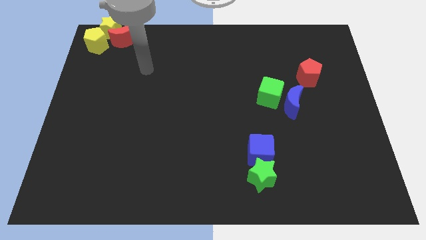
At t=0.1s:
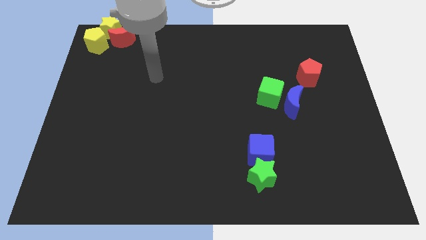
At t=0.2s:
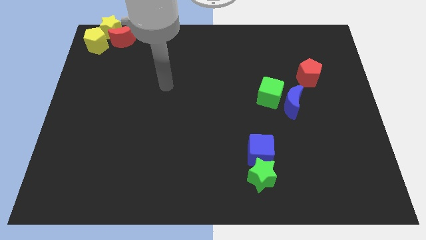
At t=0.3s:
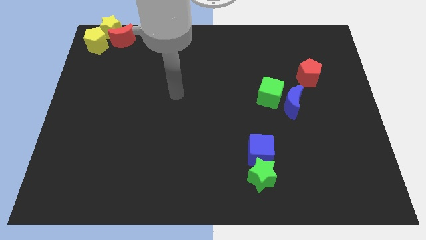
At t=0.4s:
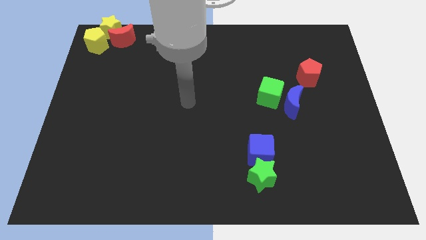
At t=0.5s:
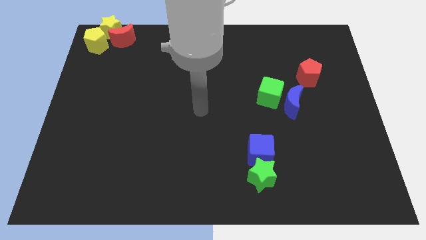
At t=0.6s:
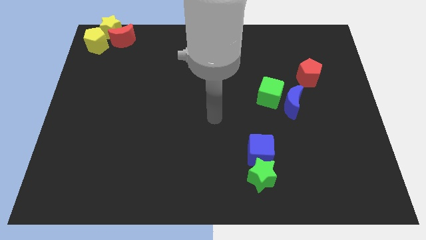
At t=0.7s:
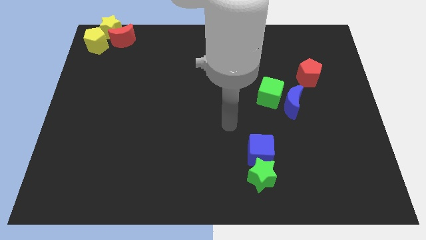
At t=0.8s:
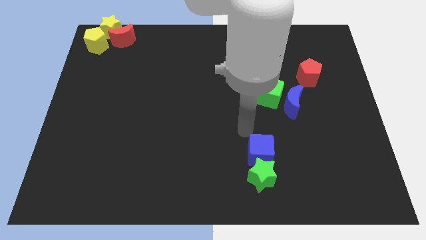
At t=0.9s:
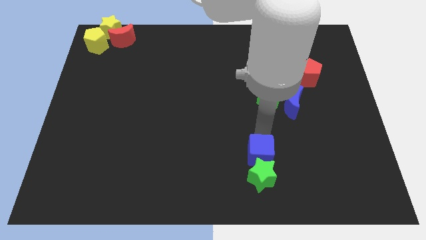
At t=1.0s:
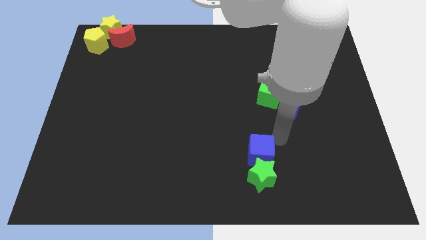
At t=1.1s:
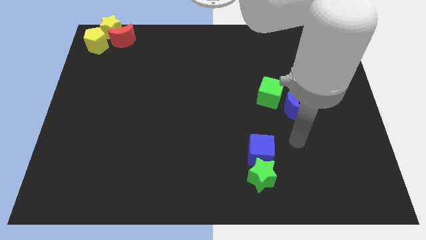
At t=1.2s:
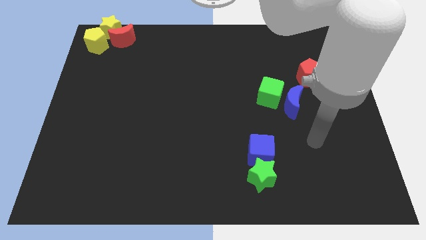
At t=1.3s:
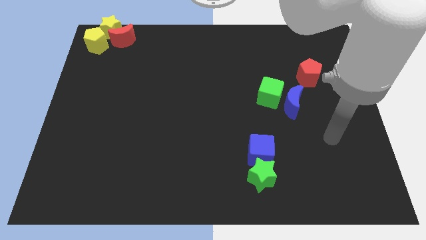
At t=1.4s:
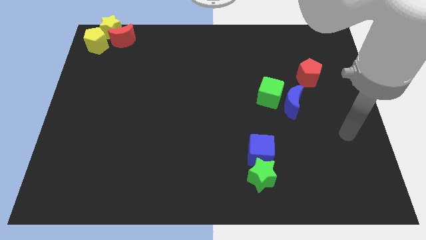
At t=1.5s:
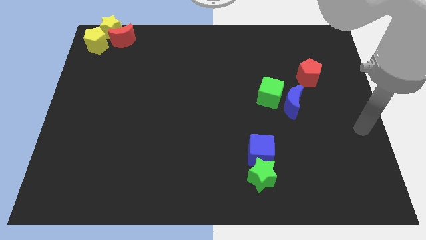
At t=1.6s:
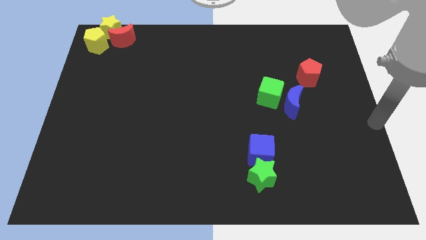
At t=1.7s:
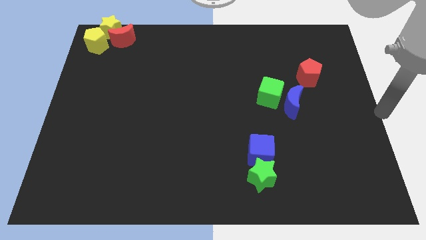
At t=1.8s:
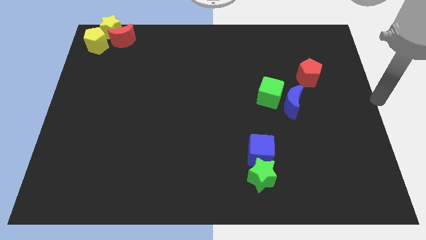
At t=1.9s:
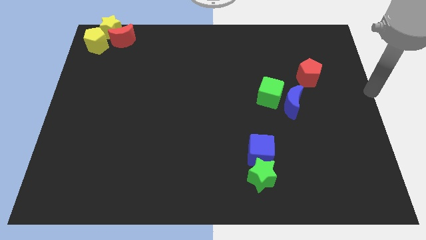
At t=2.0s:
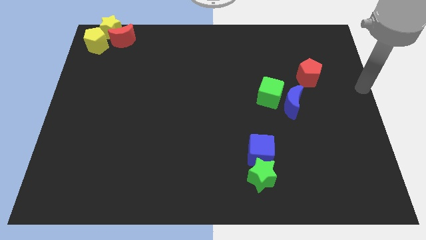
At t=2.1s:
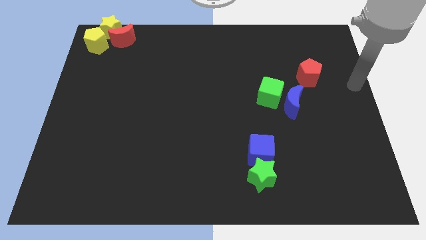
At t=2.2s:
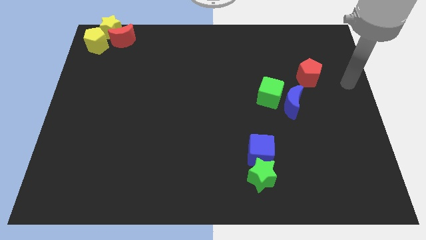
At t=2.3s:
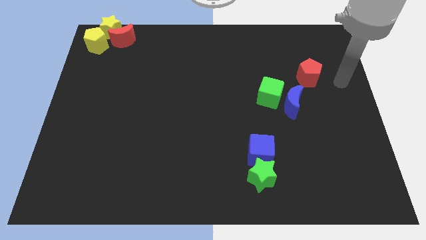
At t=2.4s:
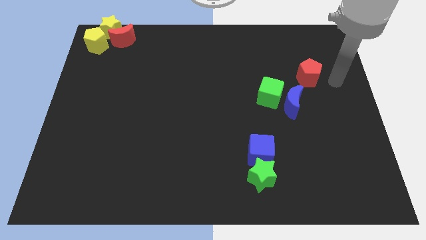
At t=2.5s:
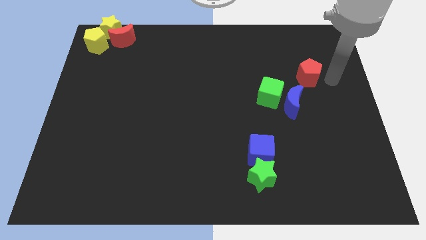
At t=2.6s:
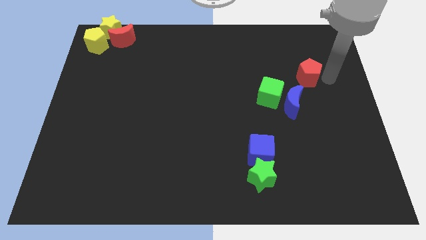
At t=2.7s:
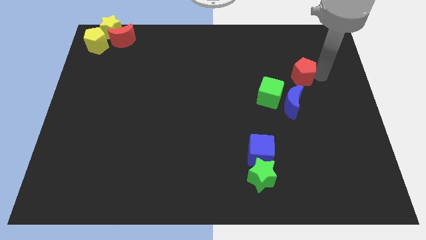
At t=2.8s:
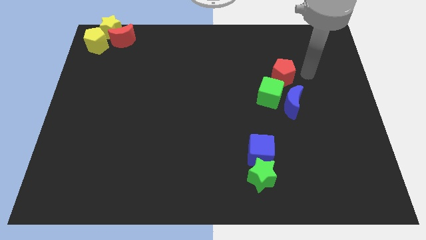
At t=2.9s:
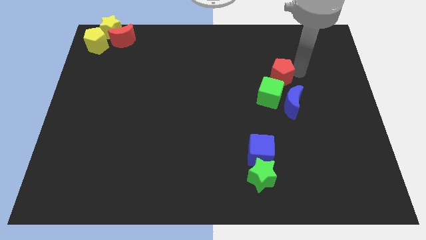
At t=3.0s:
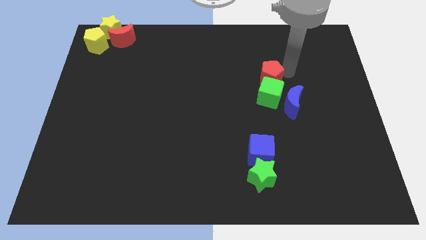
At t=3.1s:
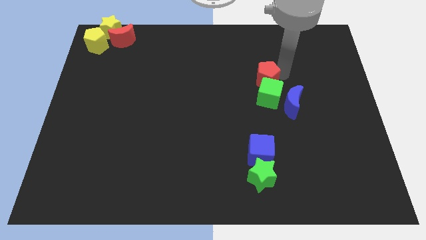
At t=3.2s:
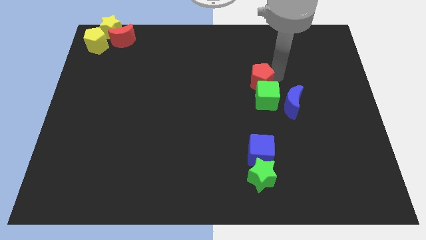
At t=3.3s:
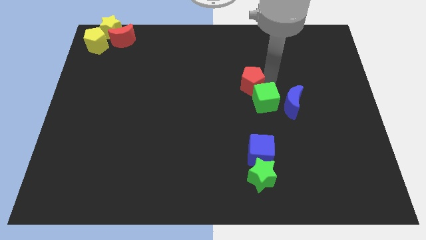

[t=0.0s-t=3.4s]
move the red pentagon into the green cube

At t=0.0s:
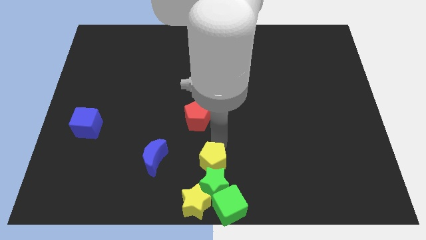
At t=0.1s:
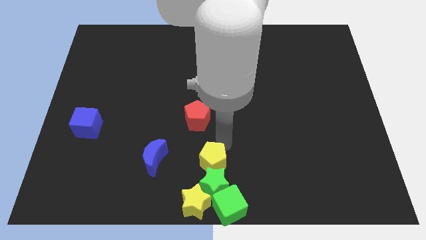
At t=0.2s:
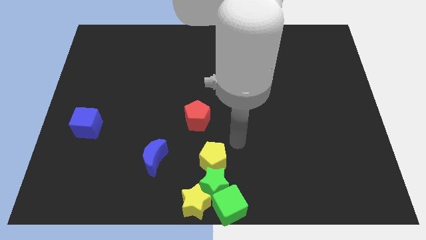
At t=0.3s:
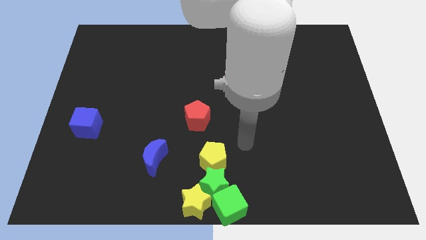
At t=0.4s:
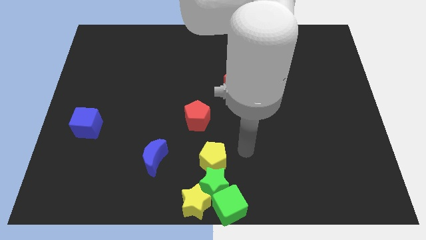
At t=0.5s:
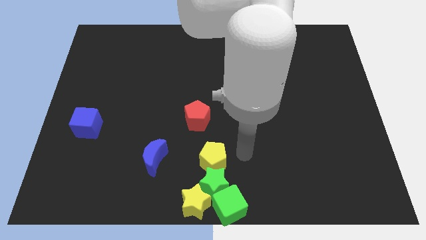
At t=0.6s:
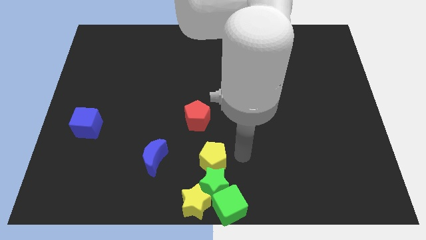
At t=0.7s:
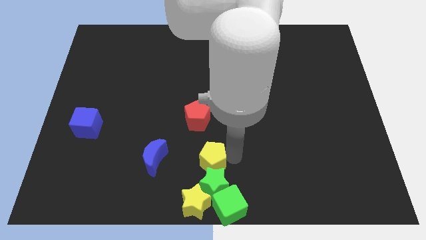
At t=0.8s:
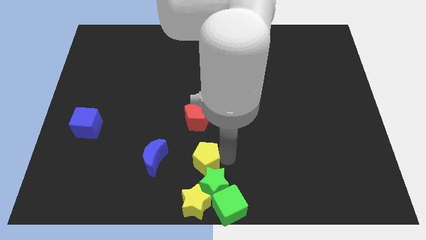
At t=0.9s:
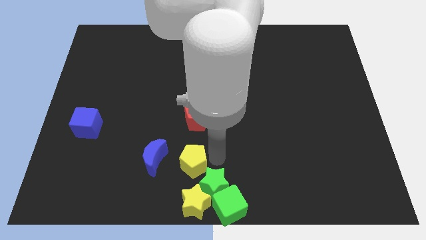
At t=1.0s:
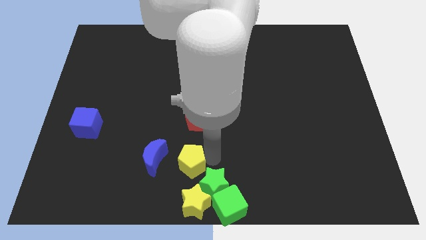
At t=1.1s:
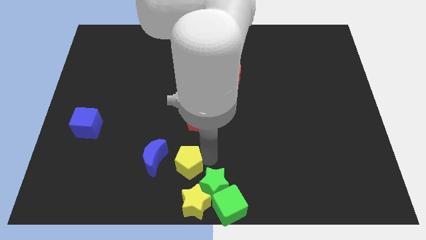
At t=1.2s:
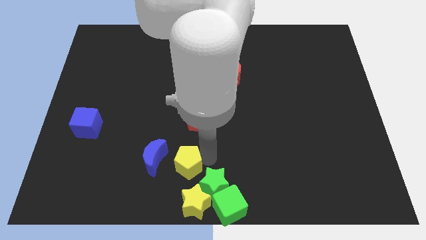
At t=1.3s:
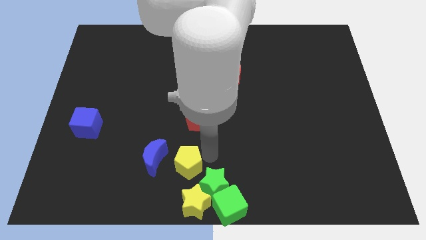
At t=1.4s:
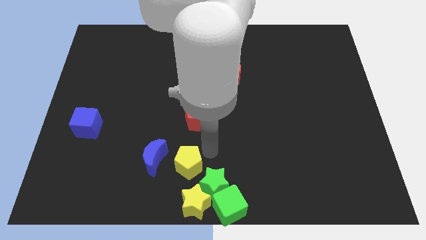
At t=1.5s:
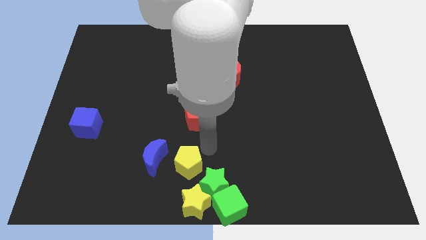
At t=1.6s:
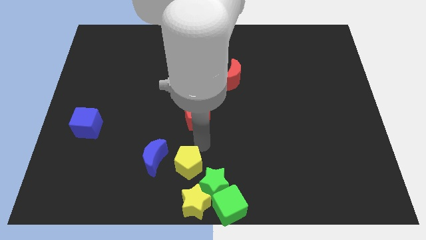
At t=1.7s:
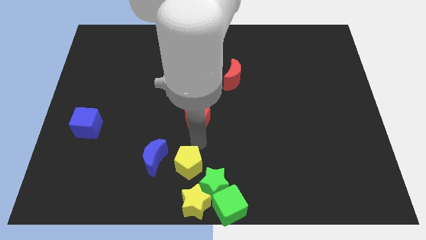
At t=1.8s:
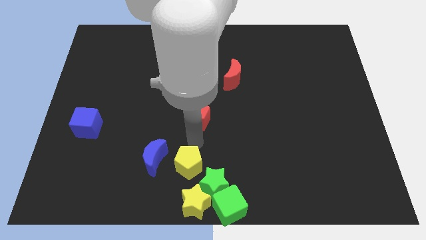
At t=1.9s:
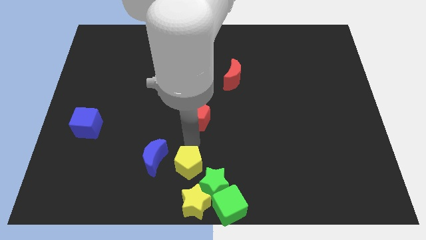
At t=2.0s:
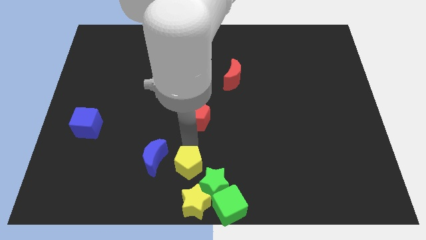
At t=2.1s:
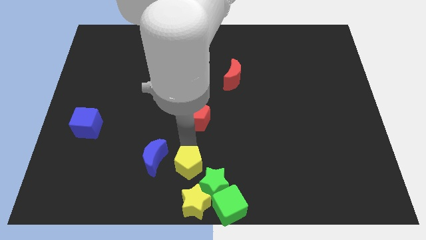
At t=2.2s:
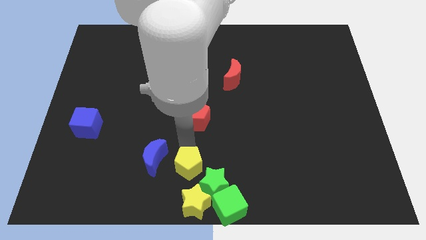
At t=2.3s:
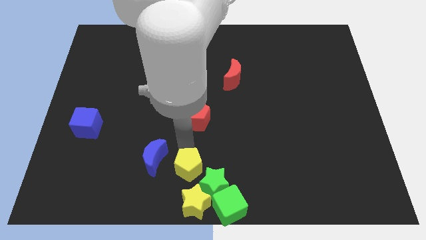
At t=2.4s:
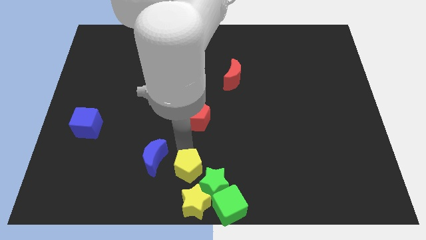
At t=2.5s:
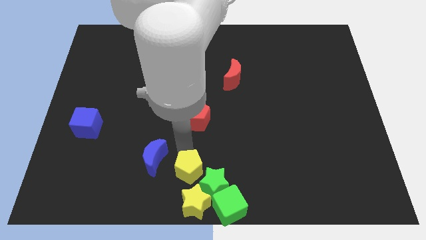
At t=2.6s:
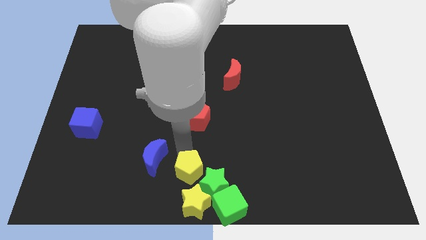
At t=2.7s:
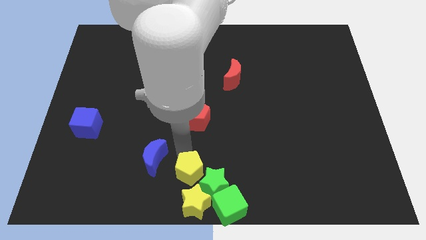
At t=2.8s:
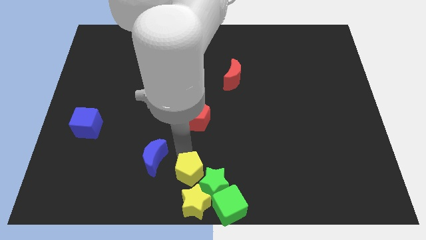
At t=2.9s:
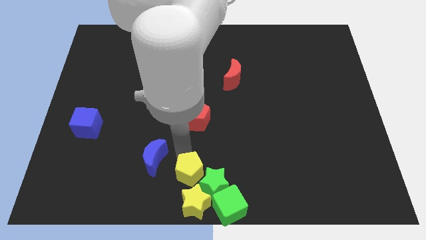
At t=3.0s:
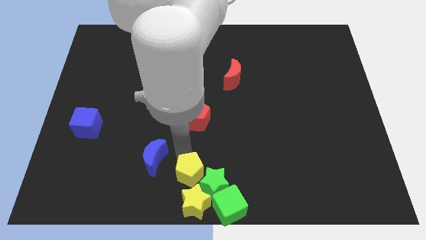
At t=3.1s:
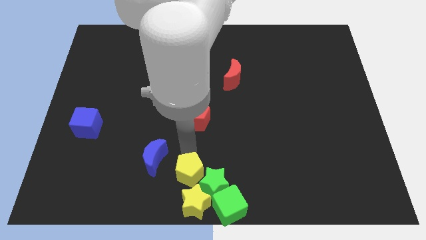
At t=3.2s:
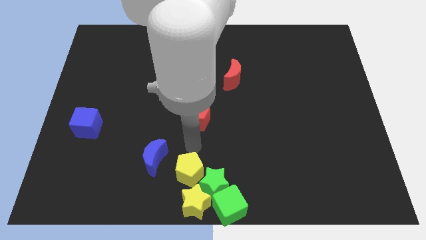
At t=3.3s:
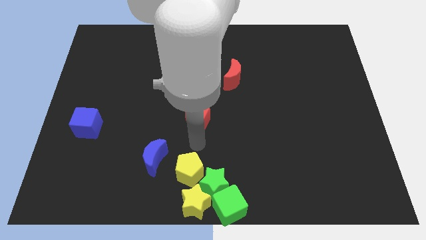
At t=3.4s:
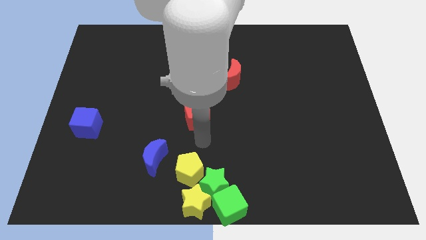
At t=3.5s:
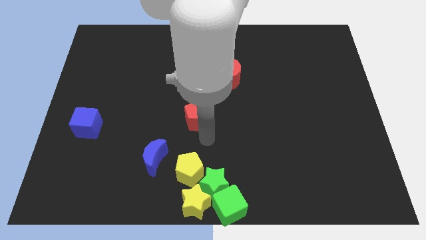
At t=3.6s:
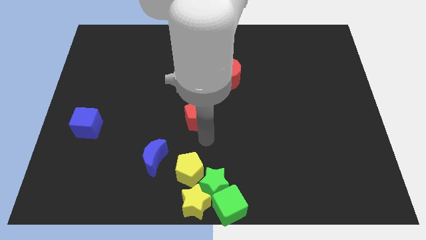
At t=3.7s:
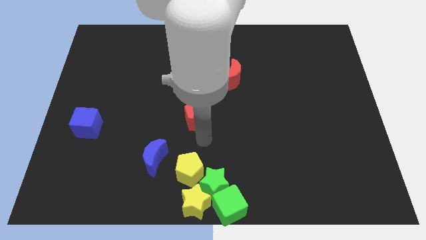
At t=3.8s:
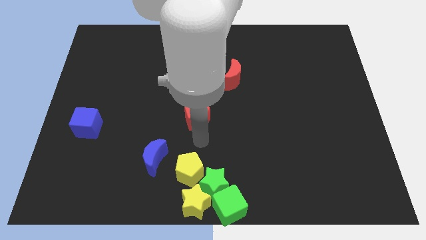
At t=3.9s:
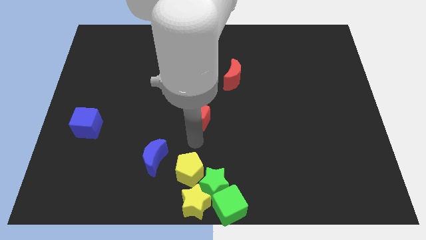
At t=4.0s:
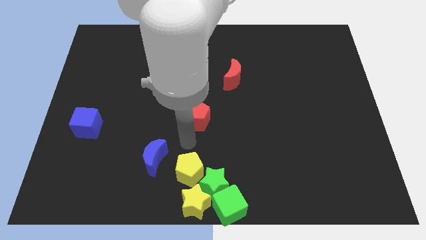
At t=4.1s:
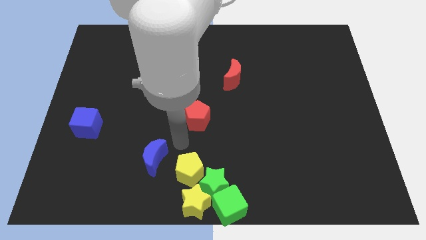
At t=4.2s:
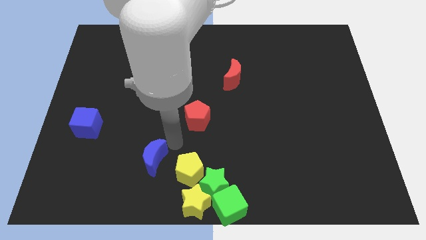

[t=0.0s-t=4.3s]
slightly move the yellow pentagon towards the yellow star

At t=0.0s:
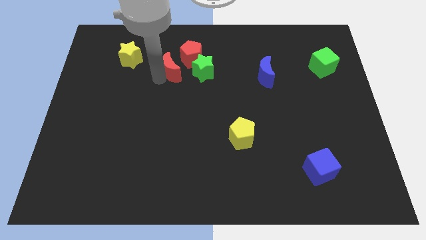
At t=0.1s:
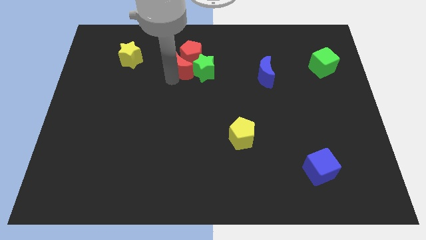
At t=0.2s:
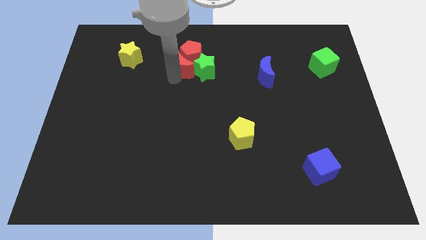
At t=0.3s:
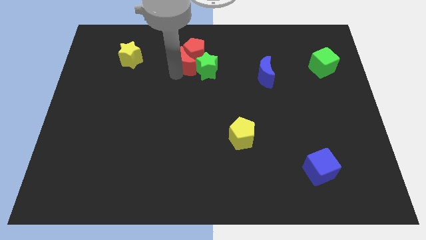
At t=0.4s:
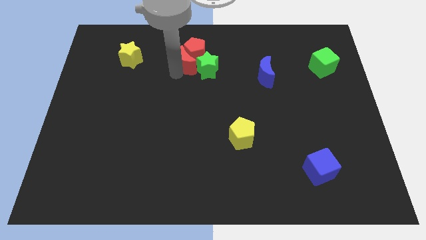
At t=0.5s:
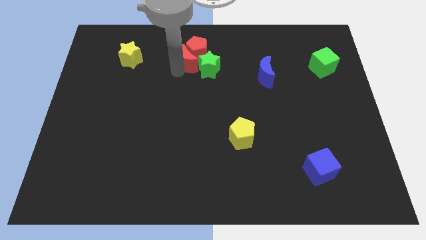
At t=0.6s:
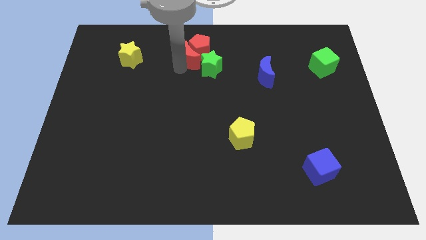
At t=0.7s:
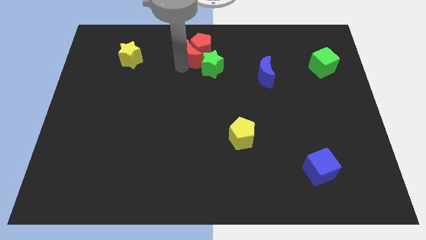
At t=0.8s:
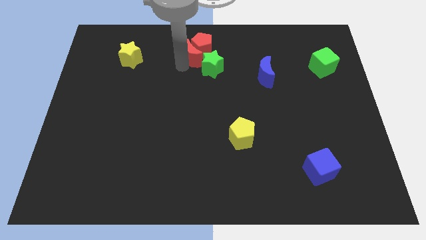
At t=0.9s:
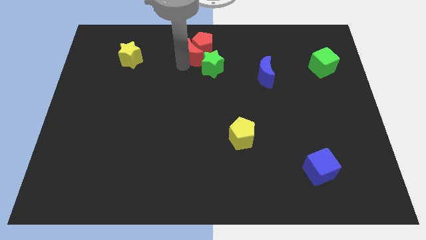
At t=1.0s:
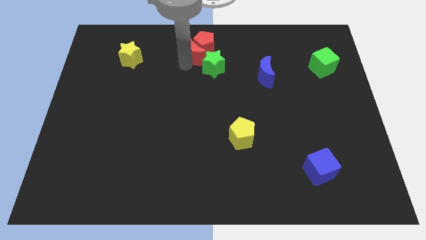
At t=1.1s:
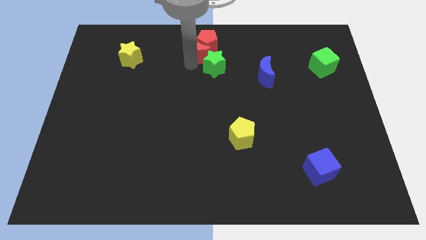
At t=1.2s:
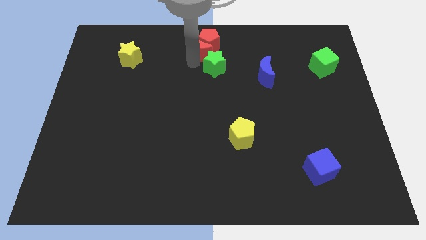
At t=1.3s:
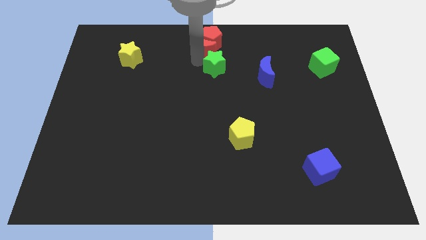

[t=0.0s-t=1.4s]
place the red crescent below the red pentagon
